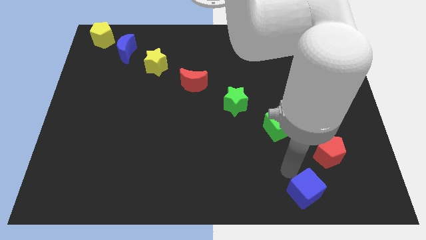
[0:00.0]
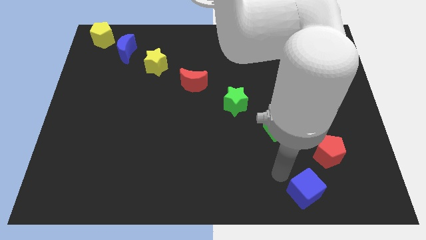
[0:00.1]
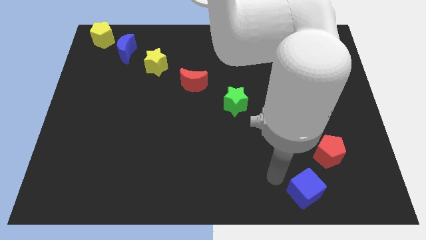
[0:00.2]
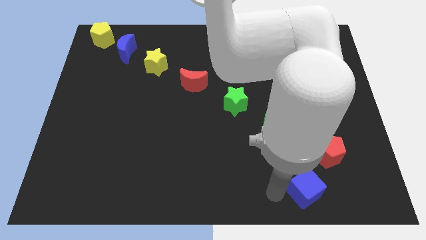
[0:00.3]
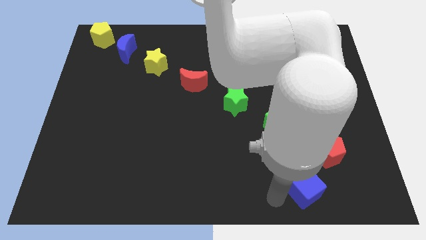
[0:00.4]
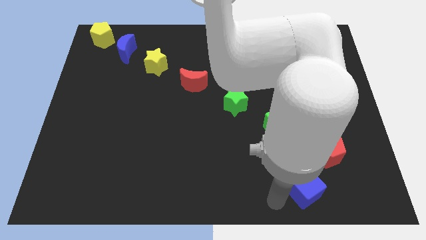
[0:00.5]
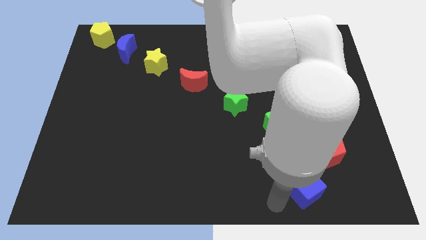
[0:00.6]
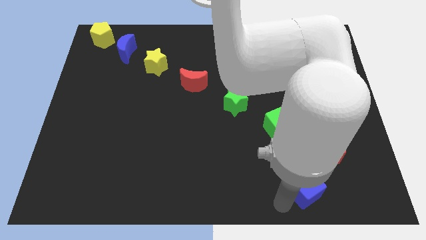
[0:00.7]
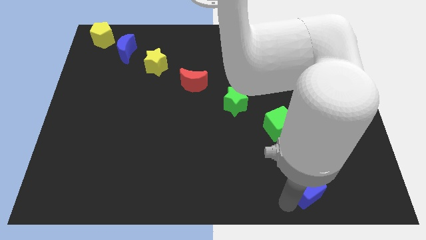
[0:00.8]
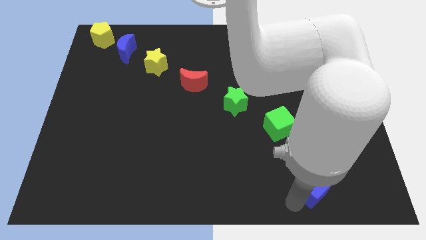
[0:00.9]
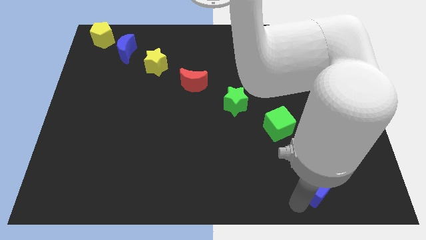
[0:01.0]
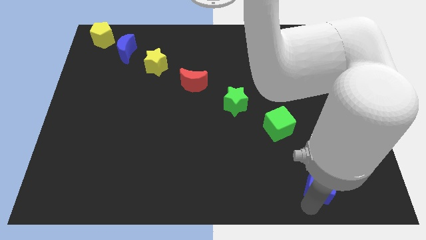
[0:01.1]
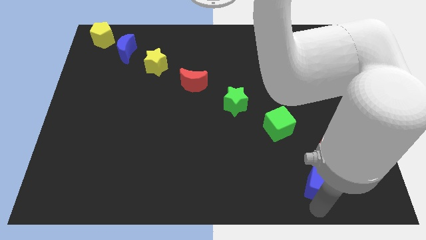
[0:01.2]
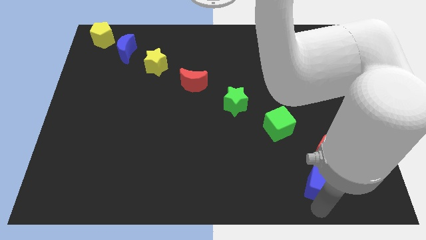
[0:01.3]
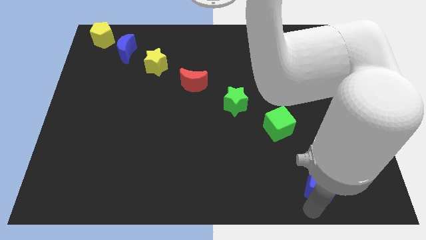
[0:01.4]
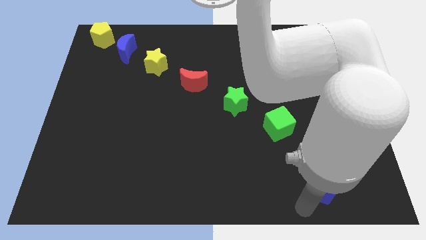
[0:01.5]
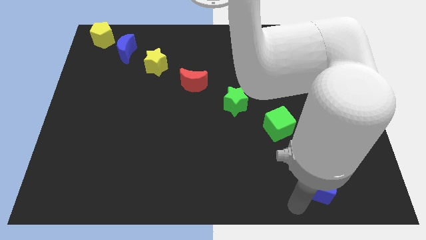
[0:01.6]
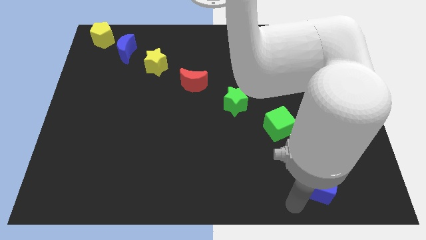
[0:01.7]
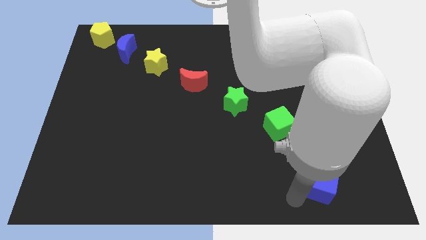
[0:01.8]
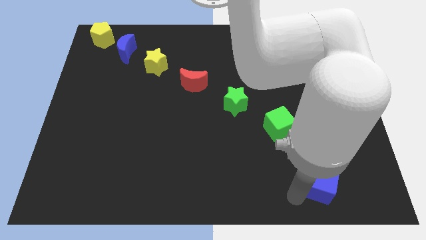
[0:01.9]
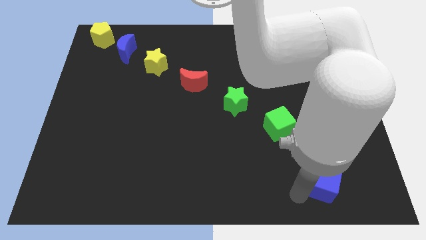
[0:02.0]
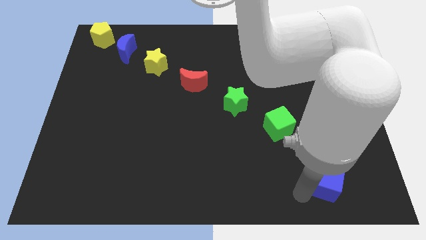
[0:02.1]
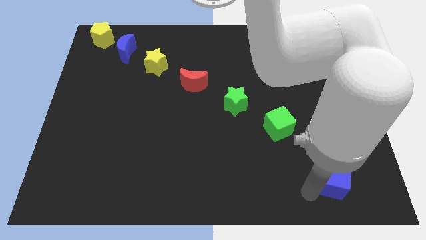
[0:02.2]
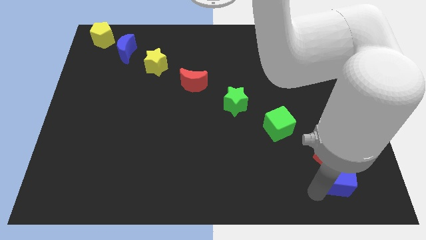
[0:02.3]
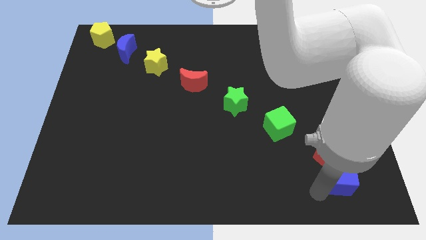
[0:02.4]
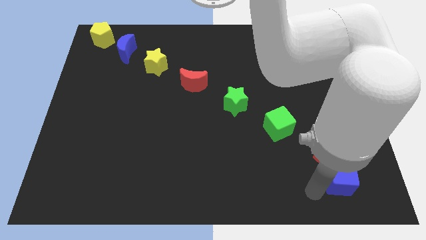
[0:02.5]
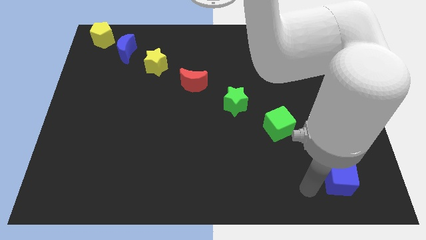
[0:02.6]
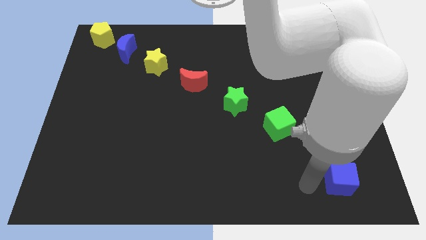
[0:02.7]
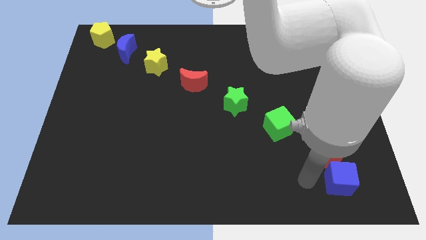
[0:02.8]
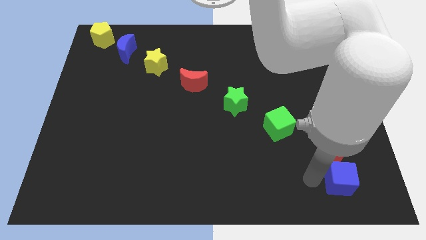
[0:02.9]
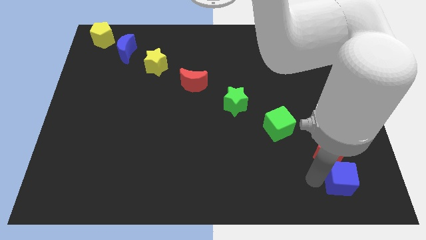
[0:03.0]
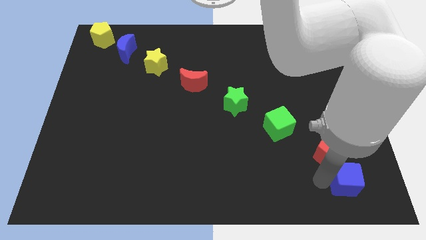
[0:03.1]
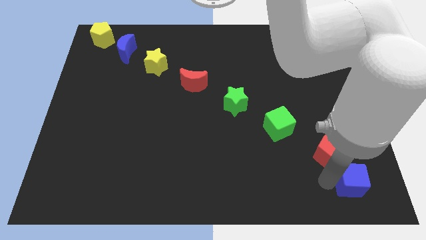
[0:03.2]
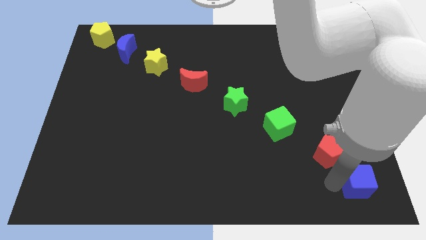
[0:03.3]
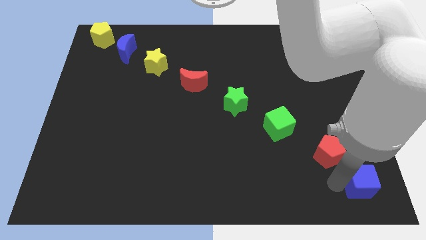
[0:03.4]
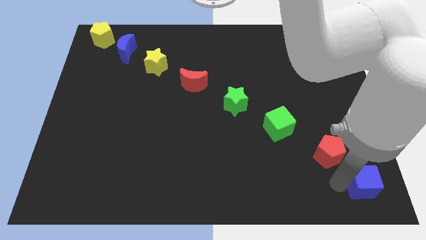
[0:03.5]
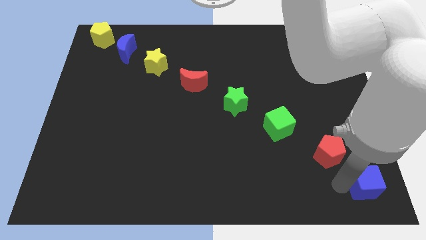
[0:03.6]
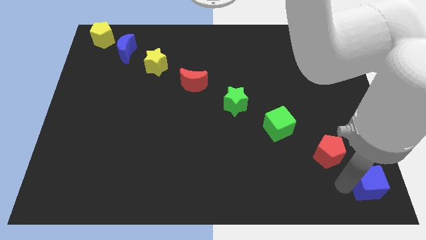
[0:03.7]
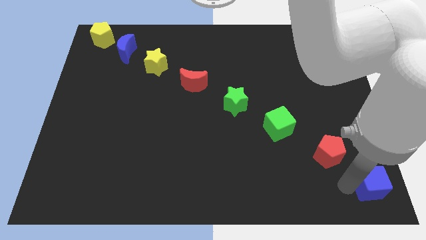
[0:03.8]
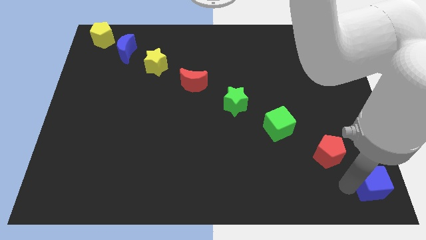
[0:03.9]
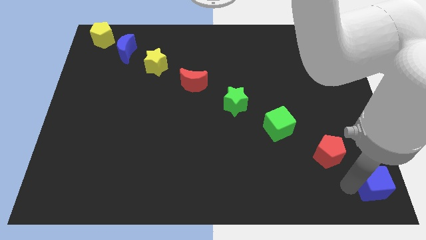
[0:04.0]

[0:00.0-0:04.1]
place the blue cube diagonal to the red pentagon

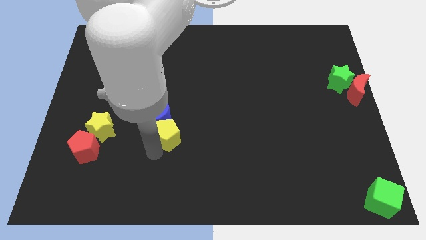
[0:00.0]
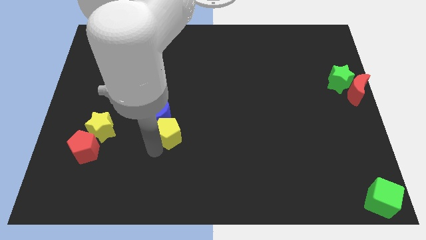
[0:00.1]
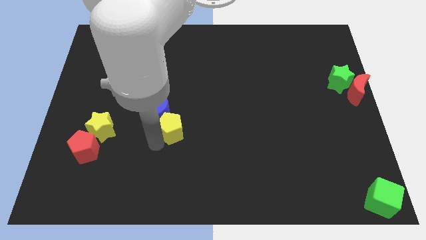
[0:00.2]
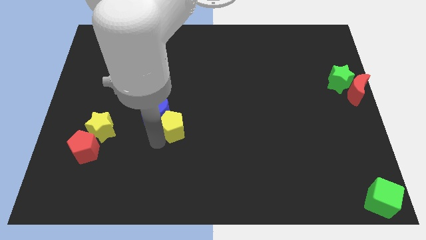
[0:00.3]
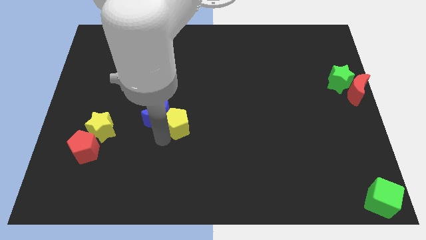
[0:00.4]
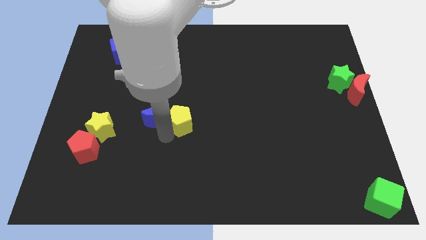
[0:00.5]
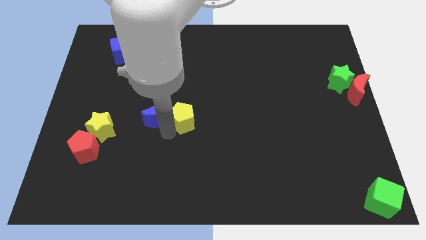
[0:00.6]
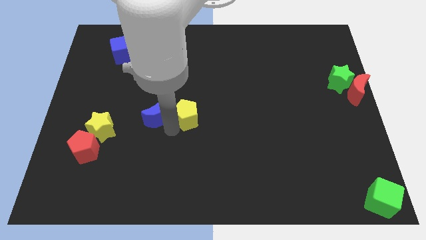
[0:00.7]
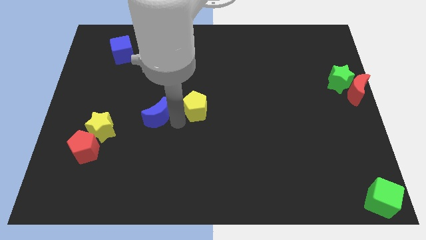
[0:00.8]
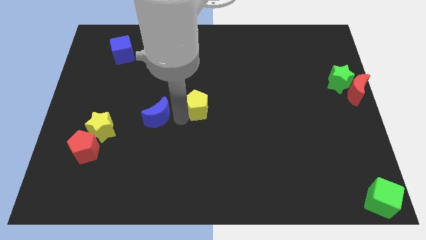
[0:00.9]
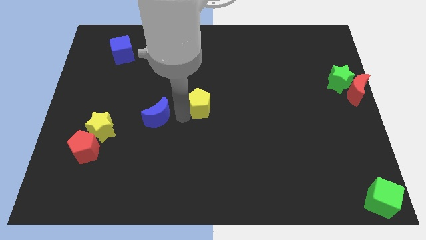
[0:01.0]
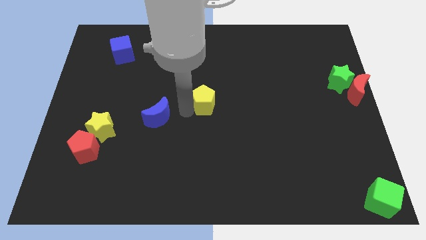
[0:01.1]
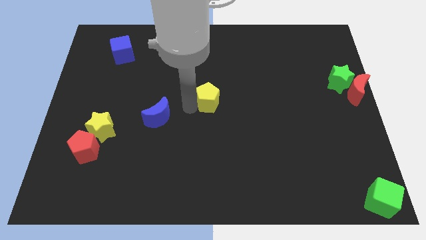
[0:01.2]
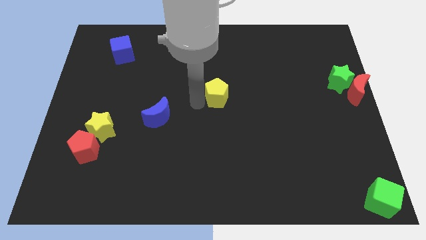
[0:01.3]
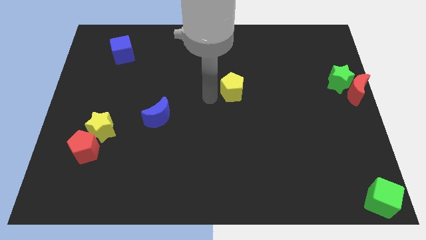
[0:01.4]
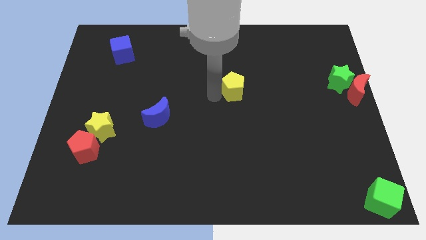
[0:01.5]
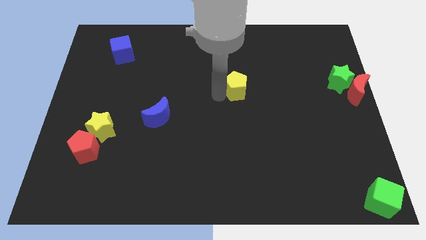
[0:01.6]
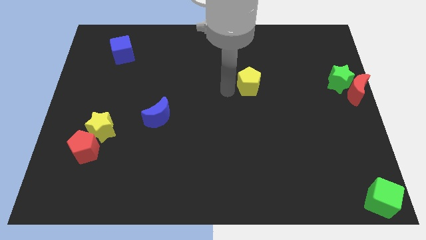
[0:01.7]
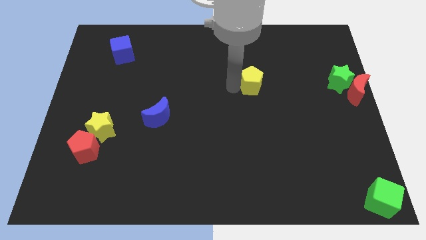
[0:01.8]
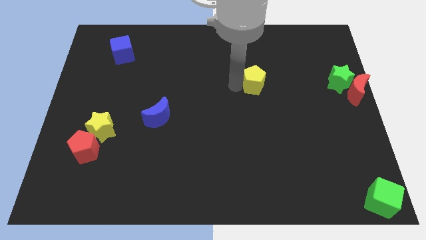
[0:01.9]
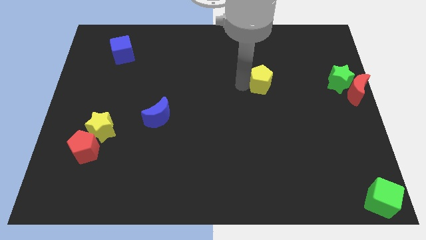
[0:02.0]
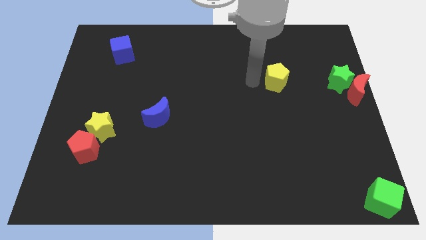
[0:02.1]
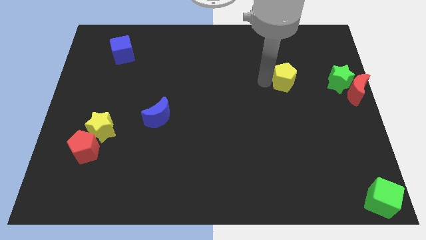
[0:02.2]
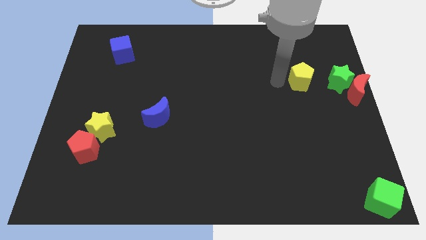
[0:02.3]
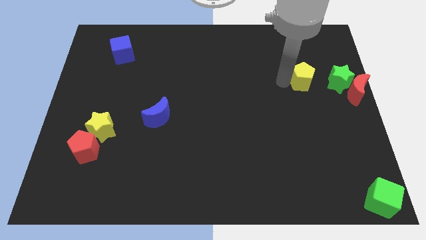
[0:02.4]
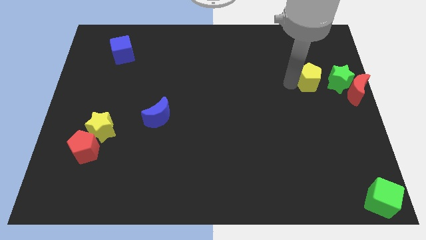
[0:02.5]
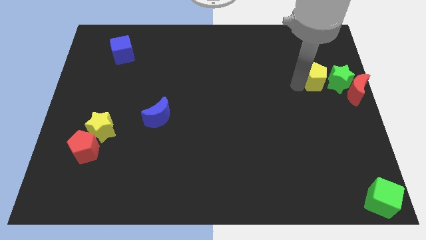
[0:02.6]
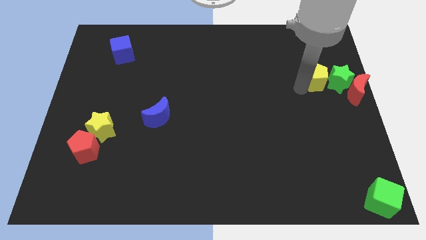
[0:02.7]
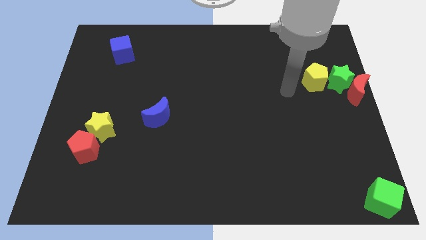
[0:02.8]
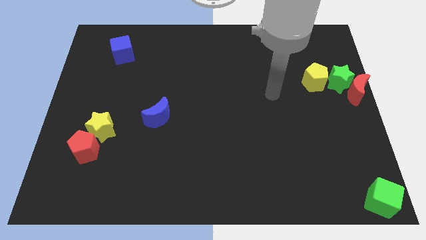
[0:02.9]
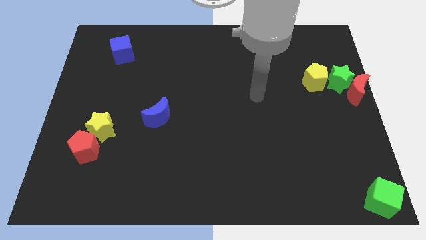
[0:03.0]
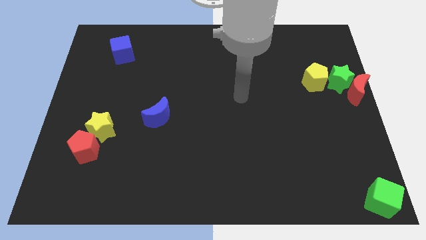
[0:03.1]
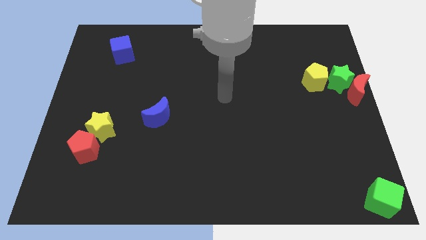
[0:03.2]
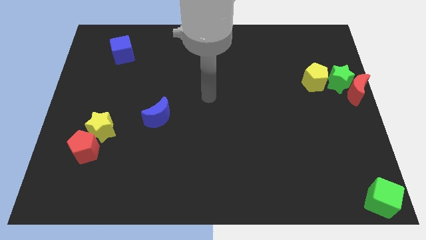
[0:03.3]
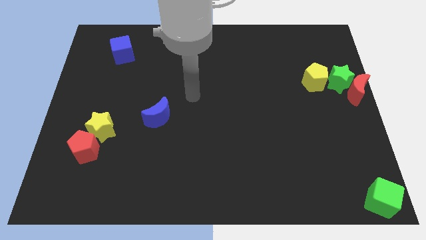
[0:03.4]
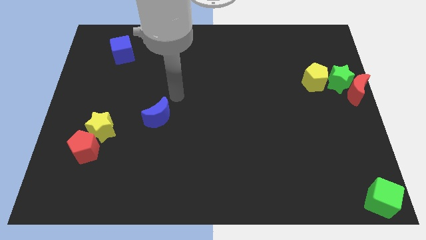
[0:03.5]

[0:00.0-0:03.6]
push yellow pentagon to the left of green star

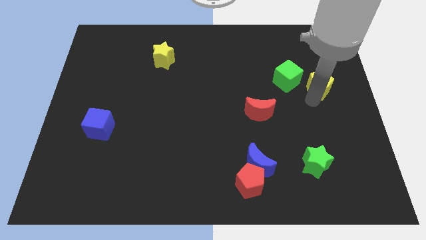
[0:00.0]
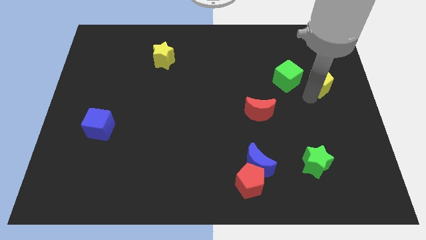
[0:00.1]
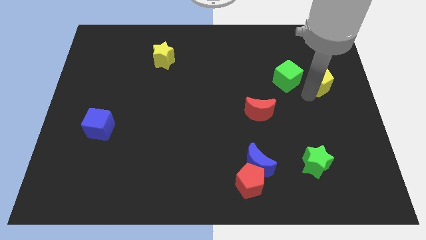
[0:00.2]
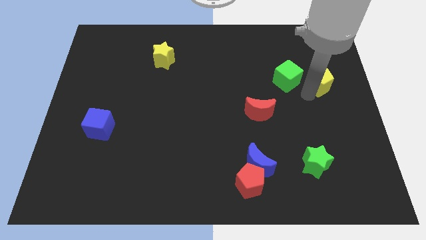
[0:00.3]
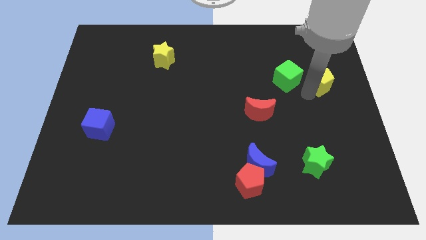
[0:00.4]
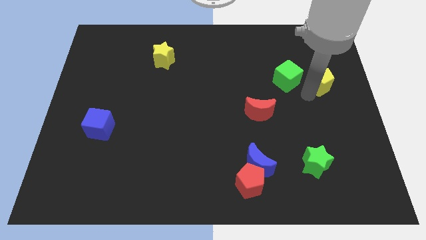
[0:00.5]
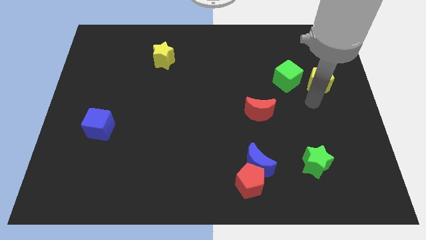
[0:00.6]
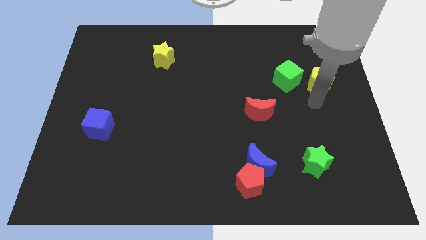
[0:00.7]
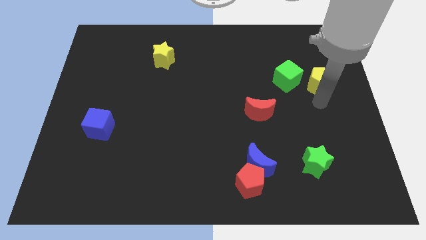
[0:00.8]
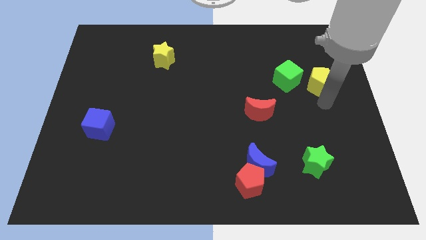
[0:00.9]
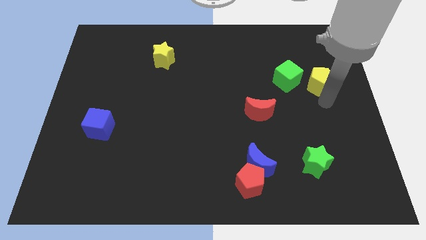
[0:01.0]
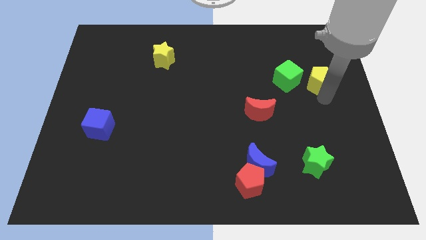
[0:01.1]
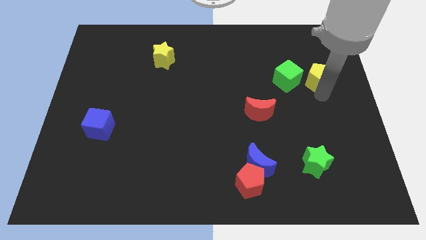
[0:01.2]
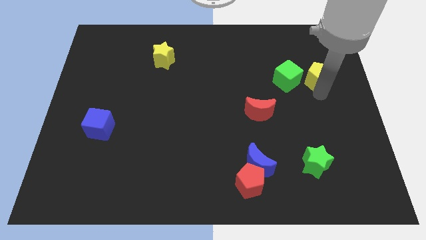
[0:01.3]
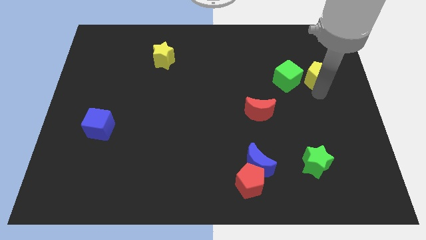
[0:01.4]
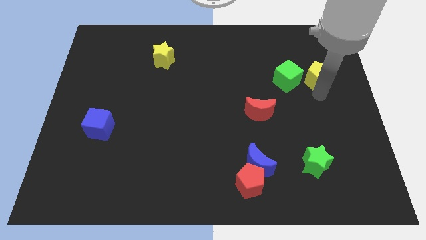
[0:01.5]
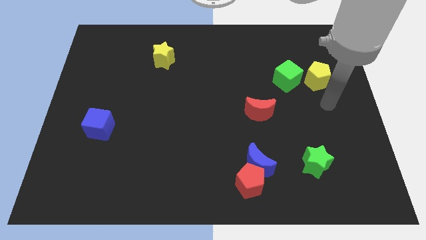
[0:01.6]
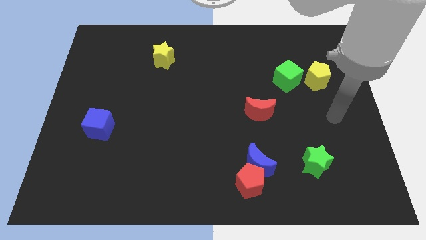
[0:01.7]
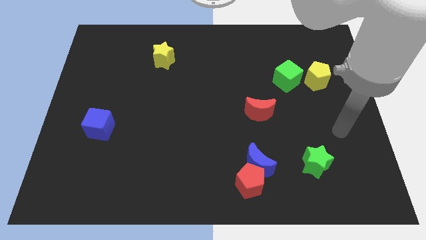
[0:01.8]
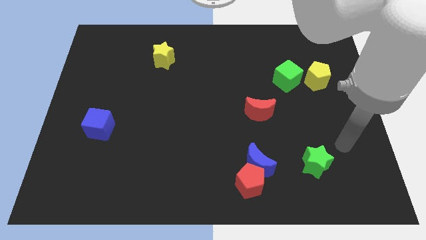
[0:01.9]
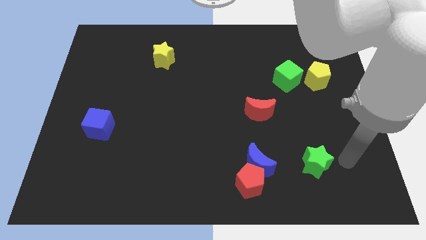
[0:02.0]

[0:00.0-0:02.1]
place yellow pentagon to the right of green cube
